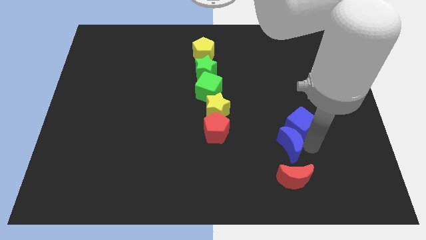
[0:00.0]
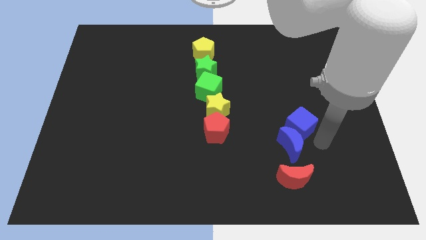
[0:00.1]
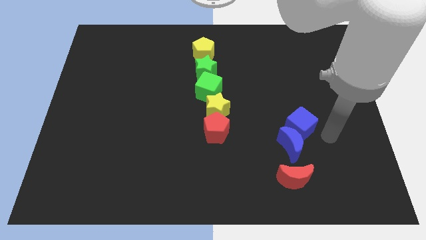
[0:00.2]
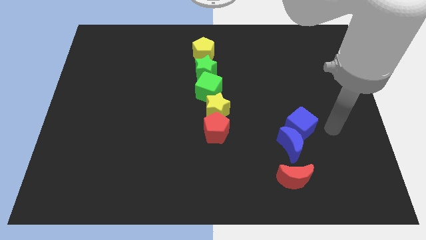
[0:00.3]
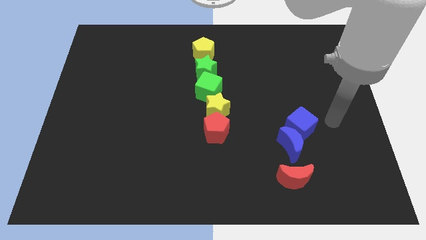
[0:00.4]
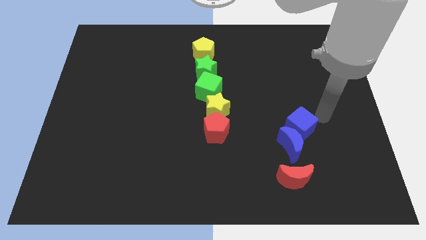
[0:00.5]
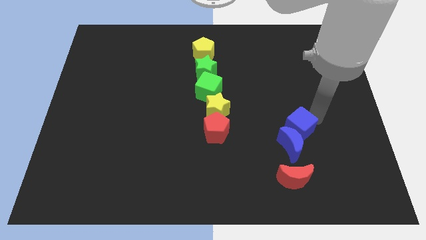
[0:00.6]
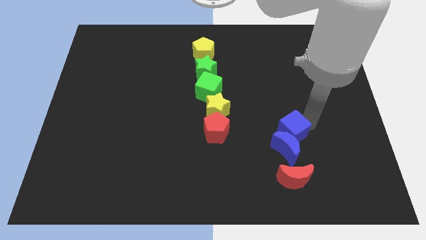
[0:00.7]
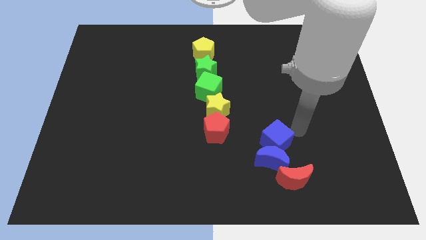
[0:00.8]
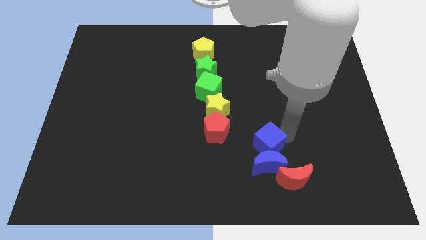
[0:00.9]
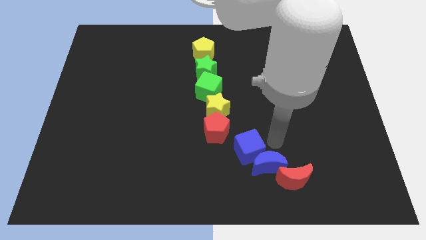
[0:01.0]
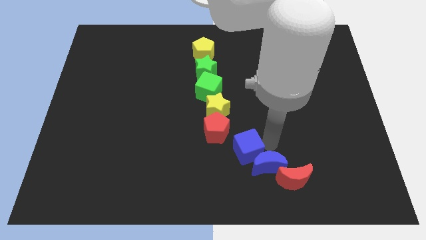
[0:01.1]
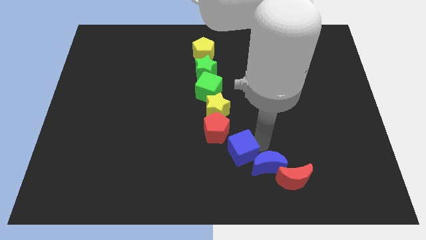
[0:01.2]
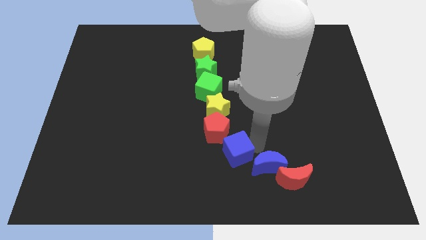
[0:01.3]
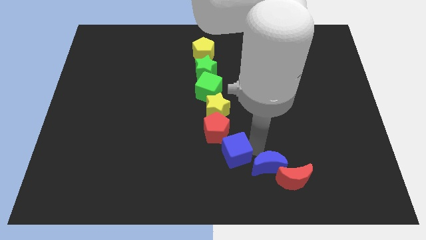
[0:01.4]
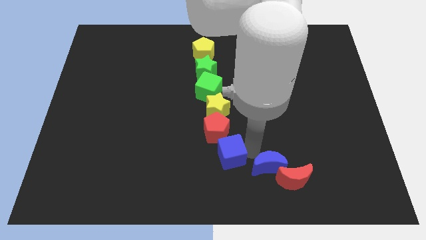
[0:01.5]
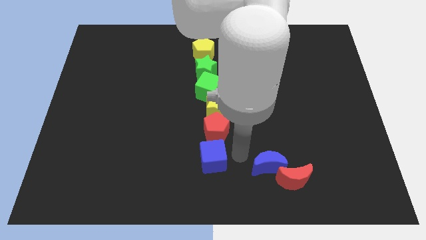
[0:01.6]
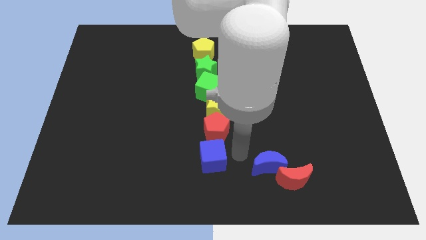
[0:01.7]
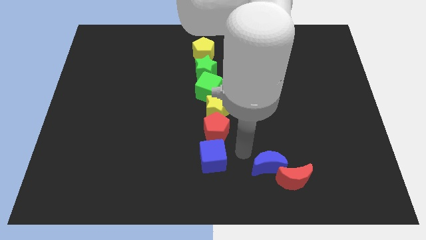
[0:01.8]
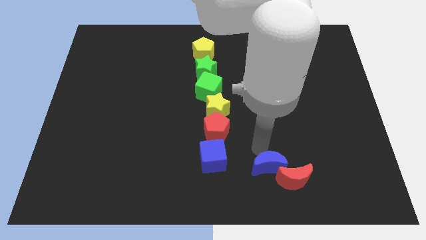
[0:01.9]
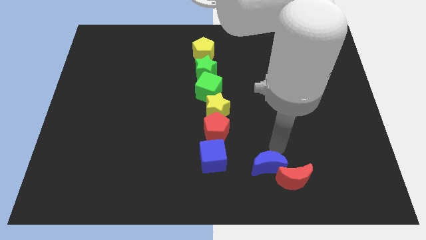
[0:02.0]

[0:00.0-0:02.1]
separate the blue cube towards bottom of red pentagon

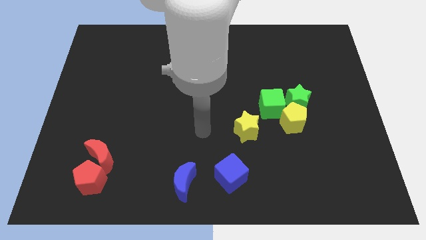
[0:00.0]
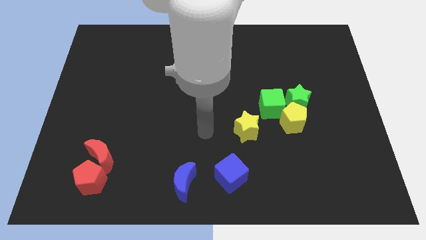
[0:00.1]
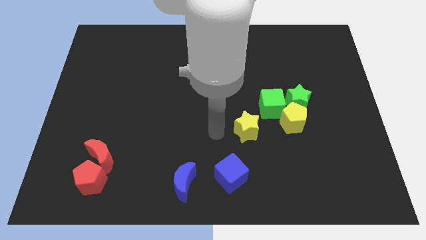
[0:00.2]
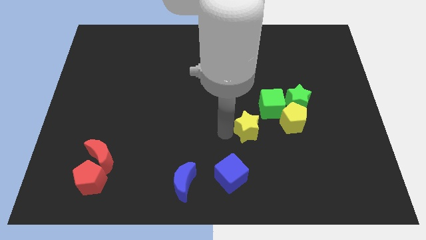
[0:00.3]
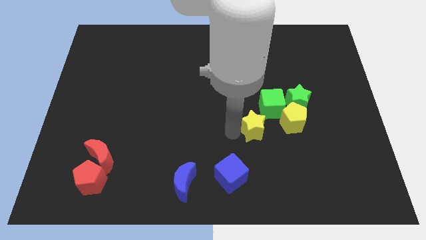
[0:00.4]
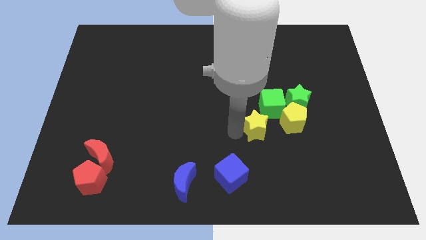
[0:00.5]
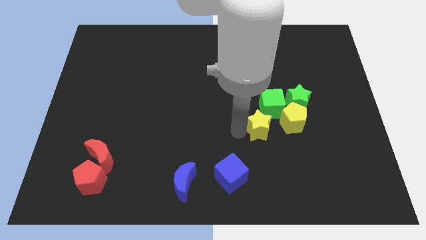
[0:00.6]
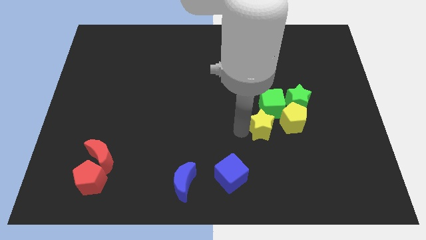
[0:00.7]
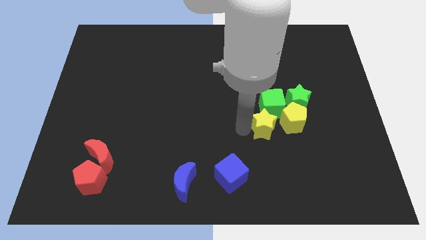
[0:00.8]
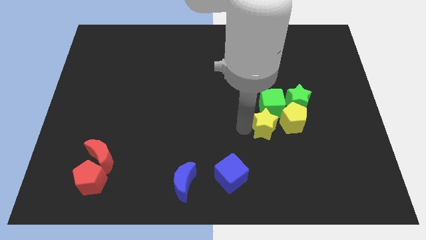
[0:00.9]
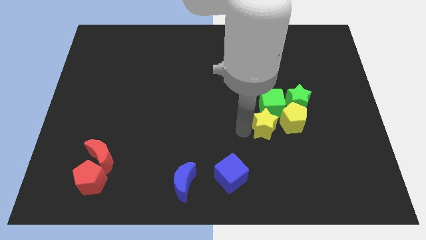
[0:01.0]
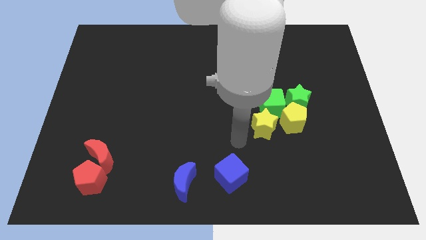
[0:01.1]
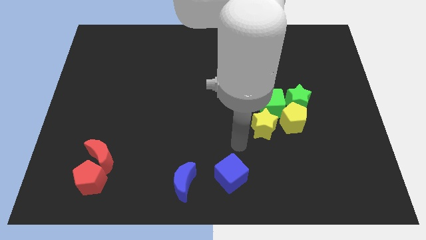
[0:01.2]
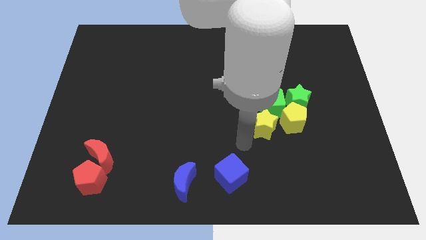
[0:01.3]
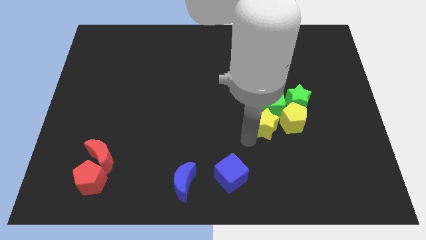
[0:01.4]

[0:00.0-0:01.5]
move the yellow star near green blocks and yellow pentagon

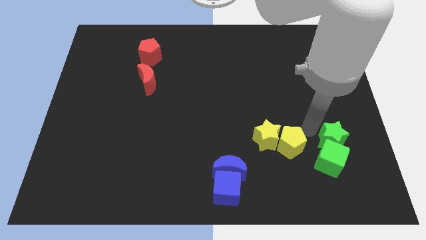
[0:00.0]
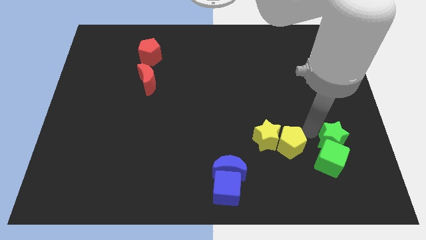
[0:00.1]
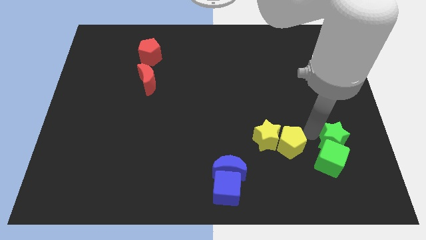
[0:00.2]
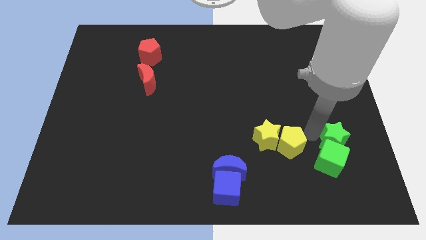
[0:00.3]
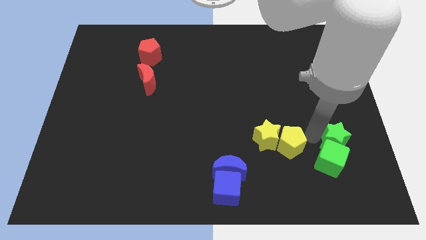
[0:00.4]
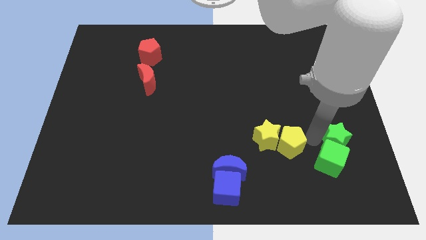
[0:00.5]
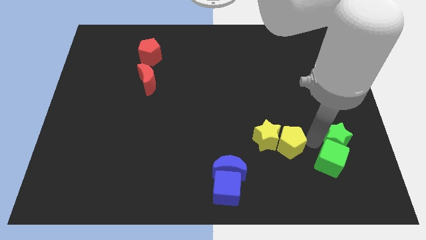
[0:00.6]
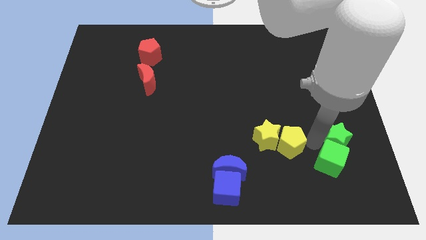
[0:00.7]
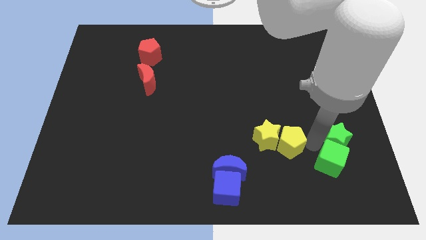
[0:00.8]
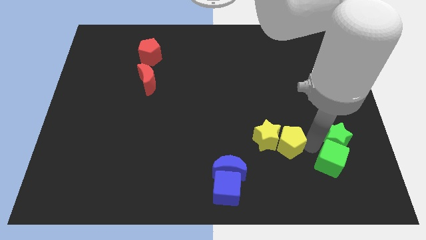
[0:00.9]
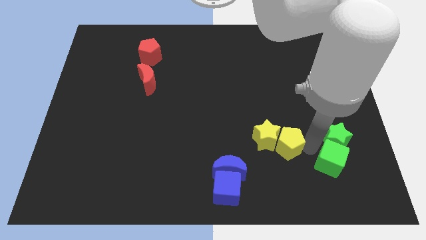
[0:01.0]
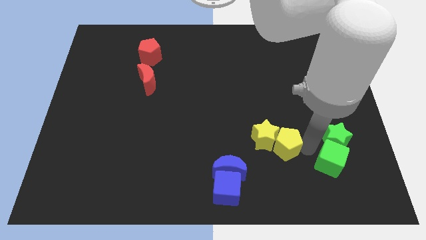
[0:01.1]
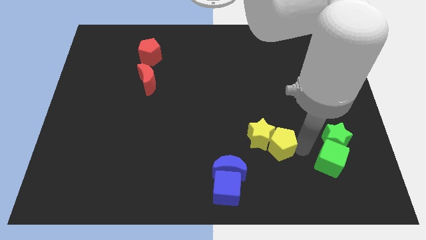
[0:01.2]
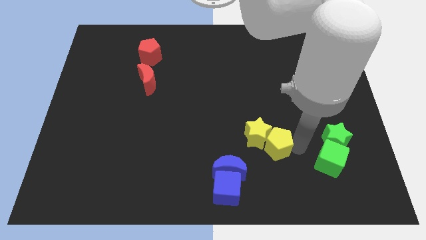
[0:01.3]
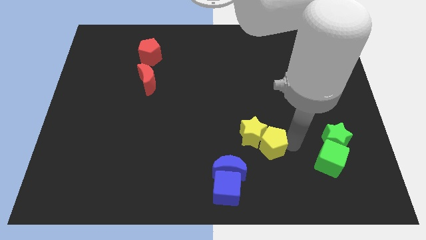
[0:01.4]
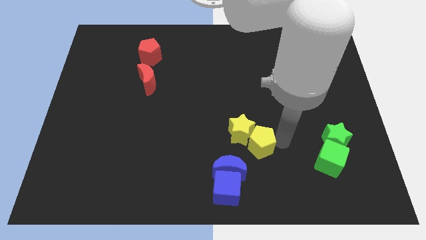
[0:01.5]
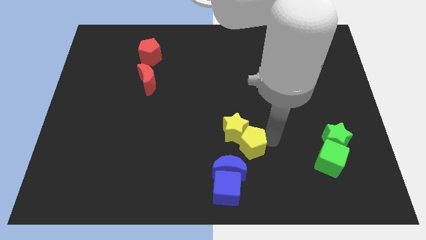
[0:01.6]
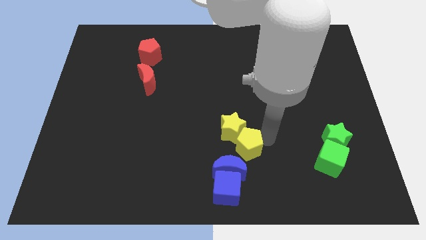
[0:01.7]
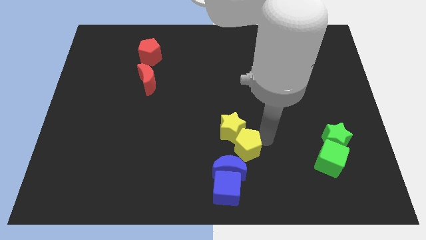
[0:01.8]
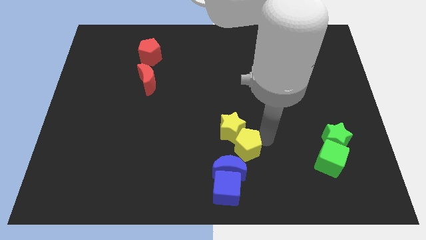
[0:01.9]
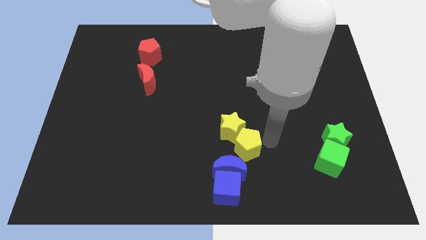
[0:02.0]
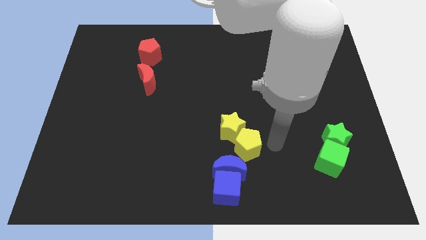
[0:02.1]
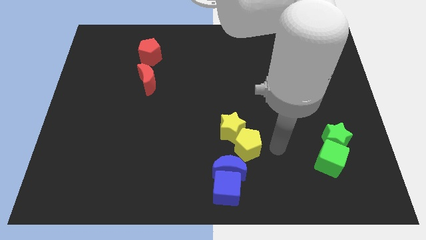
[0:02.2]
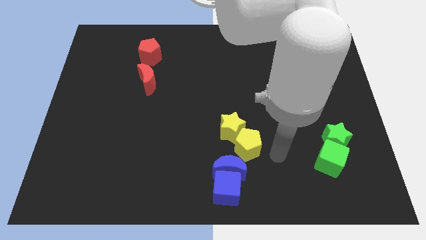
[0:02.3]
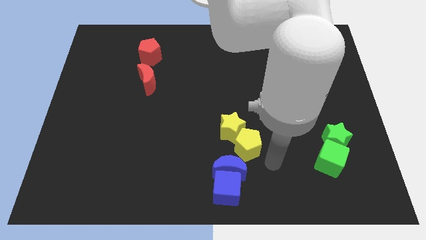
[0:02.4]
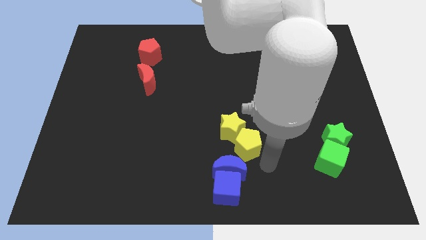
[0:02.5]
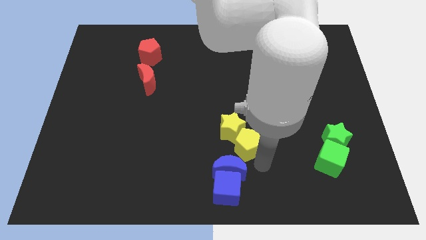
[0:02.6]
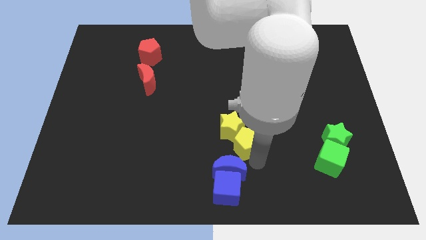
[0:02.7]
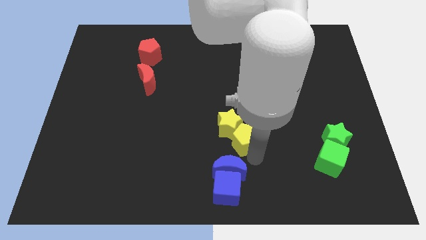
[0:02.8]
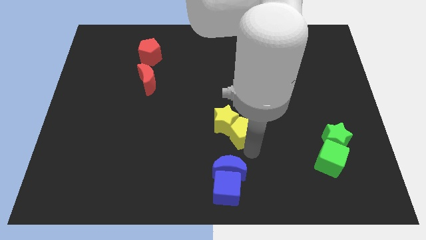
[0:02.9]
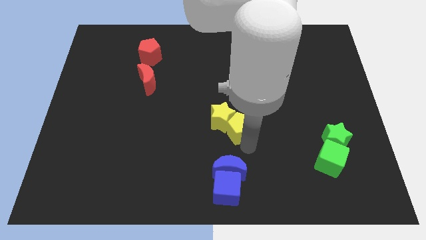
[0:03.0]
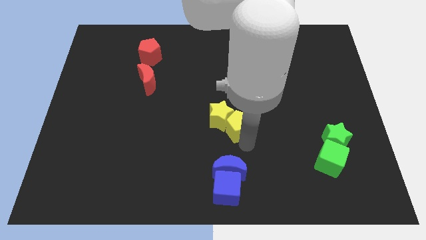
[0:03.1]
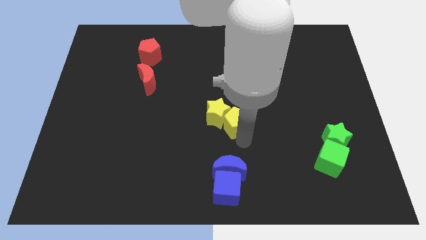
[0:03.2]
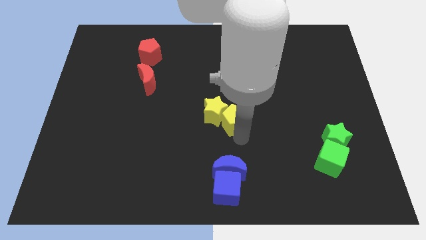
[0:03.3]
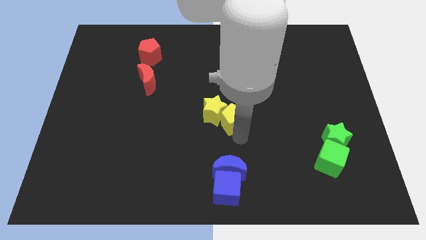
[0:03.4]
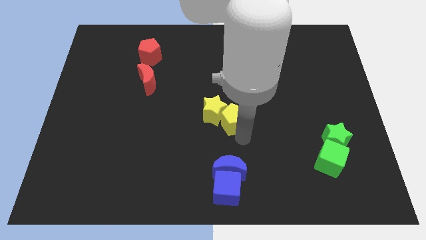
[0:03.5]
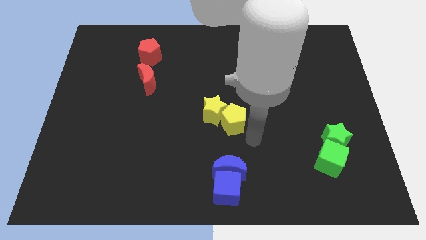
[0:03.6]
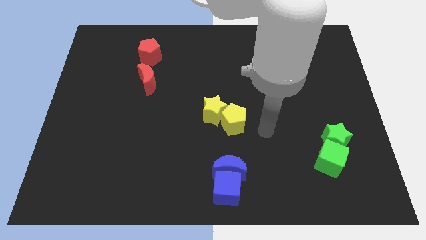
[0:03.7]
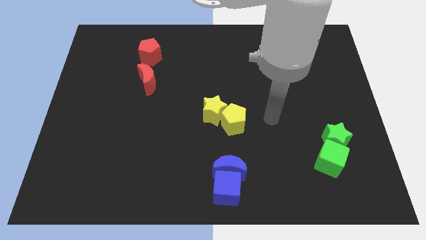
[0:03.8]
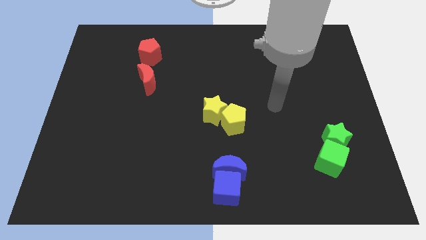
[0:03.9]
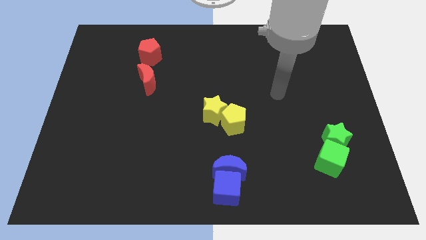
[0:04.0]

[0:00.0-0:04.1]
place the yellow pentagon and star above the blue cube and crescent

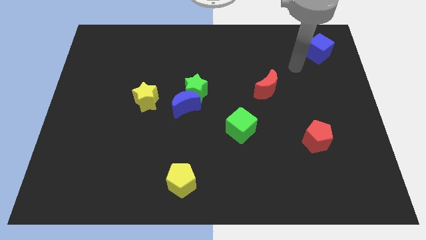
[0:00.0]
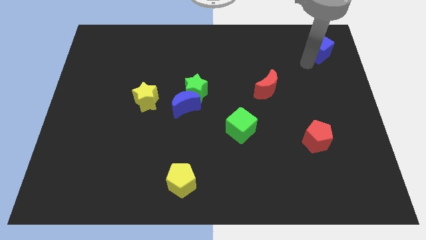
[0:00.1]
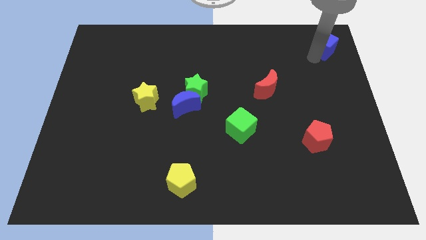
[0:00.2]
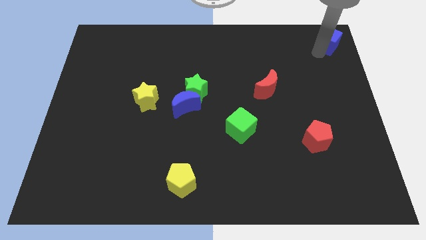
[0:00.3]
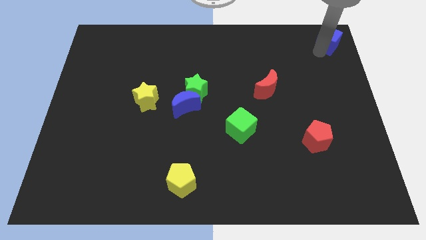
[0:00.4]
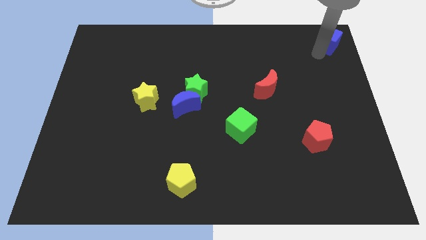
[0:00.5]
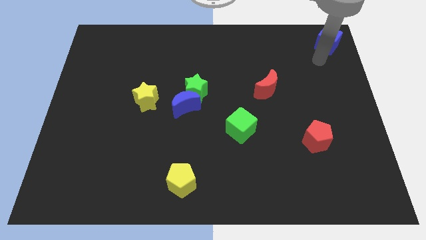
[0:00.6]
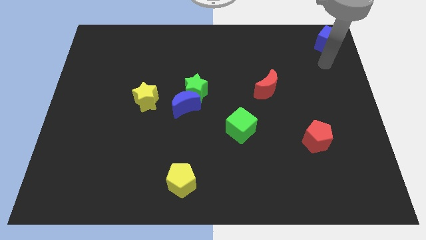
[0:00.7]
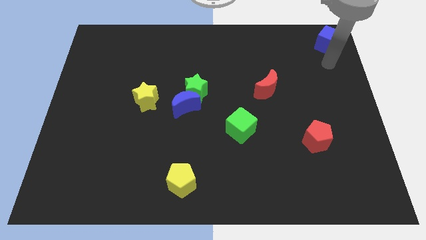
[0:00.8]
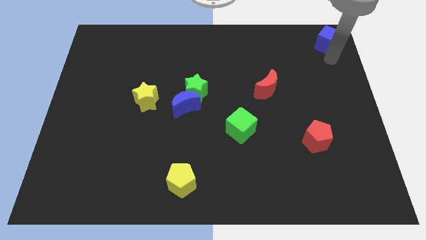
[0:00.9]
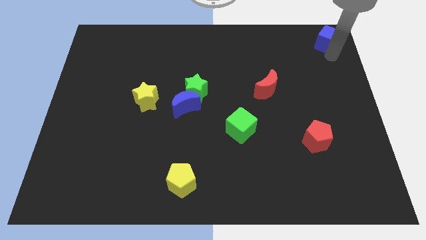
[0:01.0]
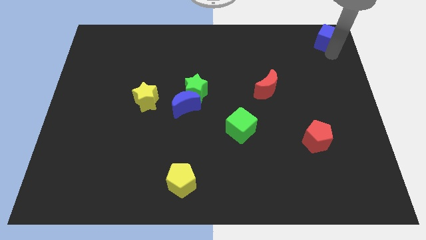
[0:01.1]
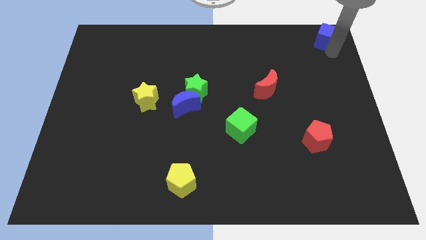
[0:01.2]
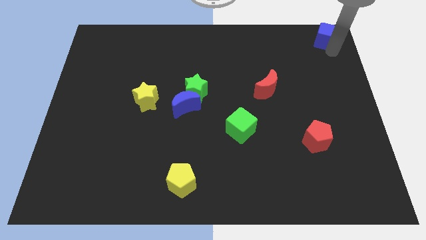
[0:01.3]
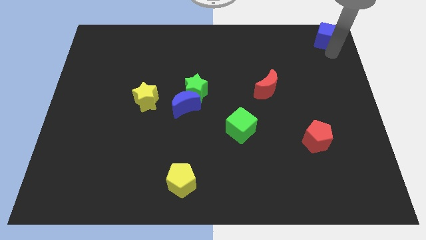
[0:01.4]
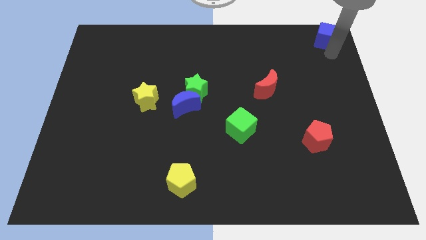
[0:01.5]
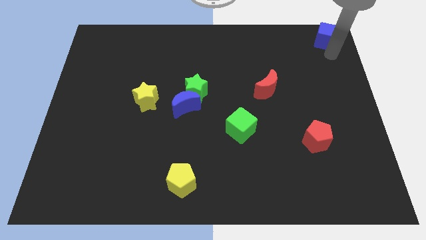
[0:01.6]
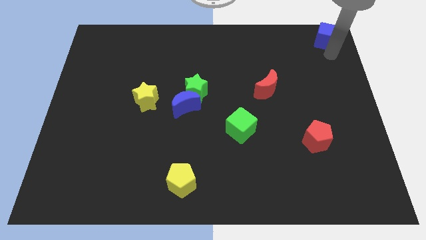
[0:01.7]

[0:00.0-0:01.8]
move the blue cube to the top right corner
